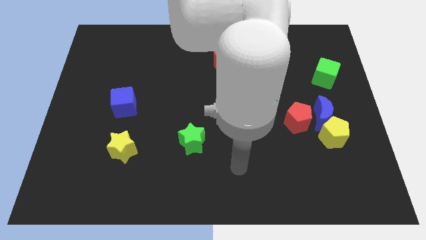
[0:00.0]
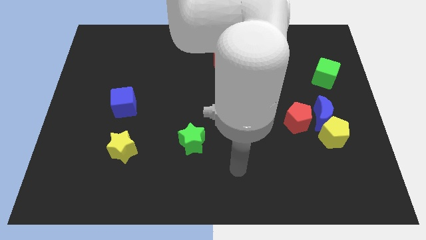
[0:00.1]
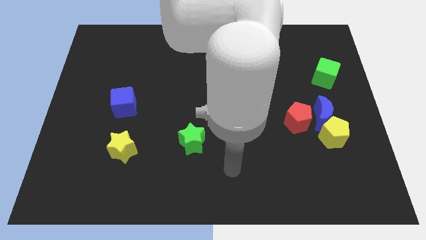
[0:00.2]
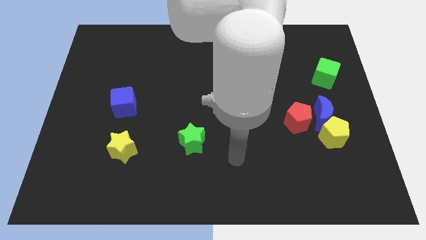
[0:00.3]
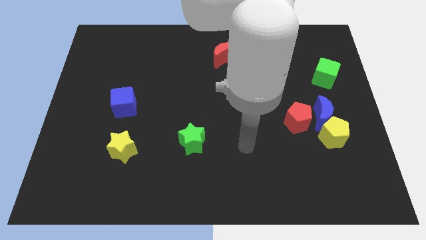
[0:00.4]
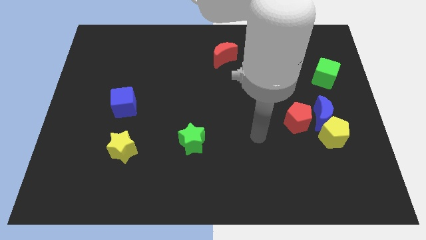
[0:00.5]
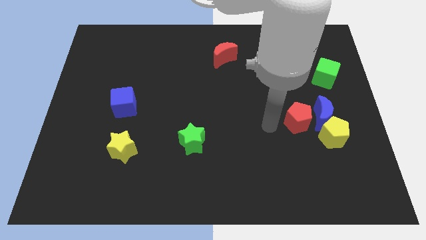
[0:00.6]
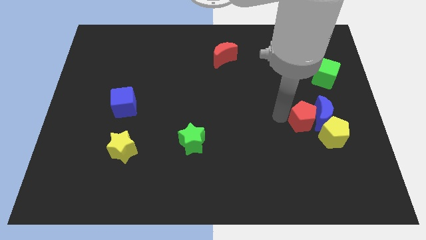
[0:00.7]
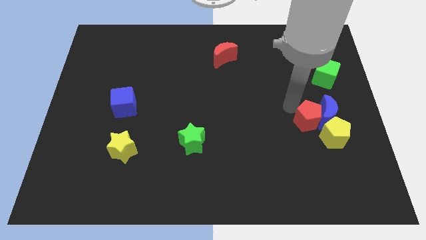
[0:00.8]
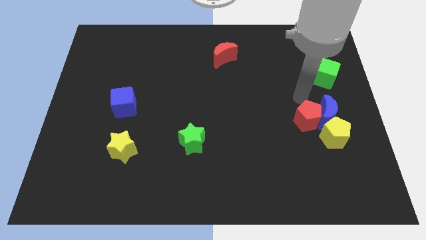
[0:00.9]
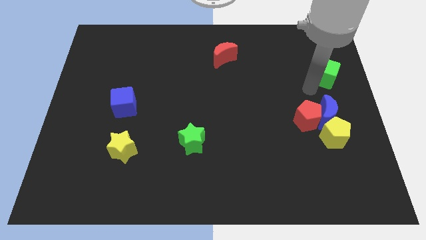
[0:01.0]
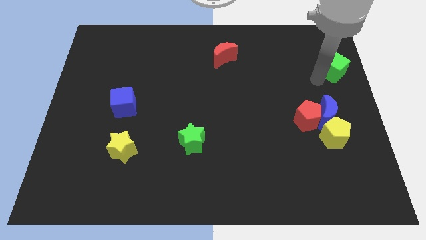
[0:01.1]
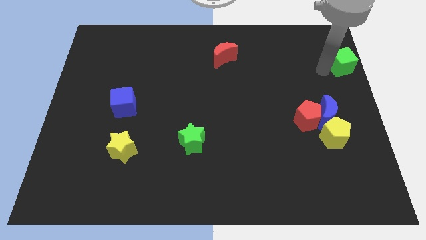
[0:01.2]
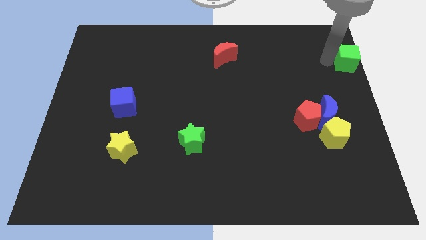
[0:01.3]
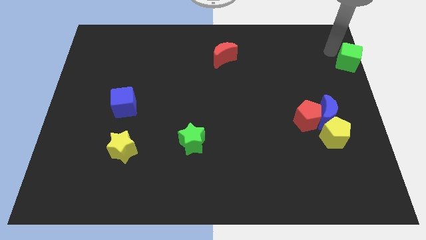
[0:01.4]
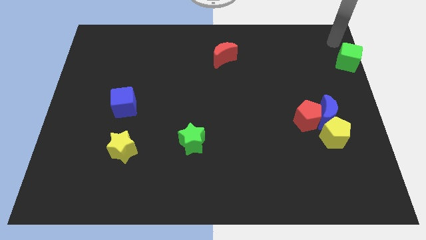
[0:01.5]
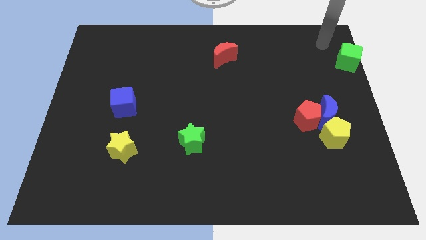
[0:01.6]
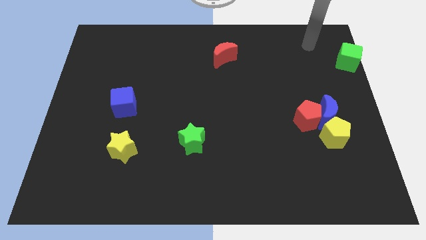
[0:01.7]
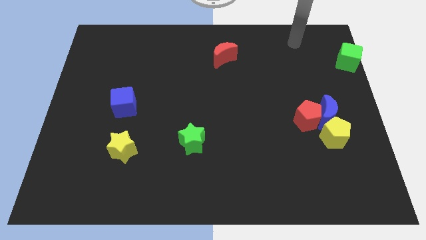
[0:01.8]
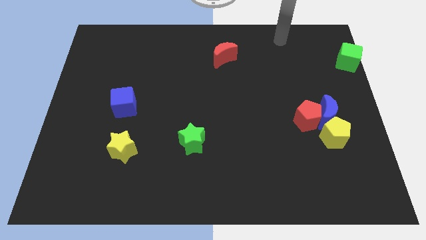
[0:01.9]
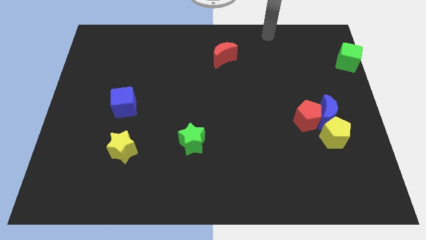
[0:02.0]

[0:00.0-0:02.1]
push the red pentagon into the blue crescent

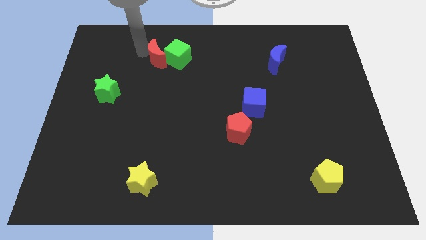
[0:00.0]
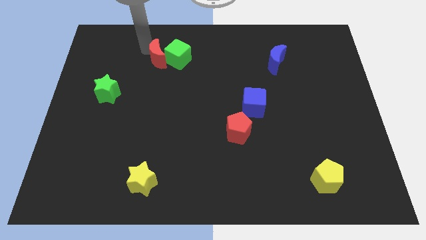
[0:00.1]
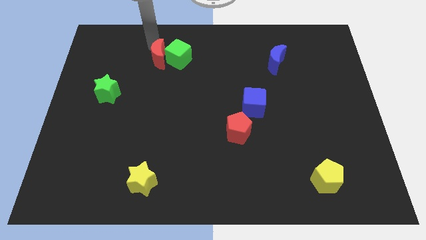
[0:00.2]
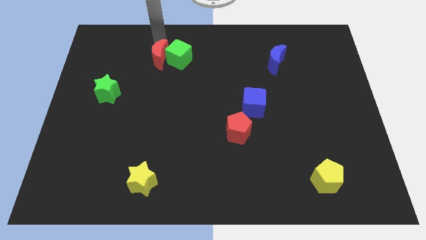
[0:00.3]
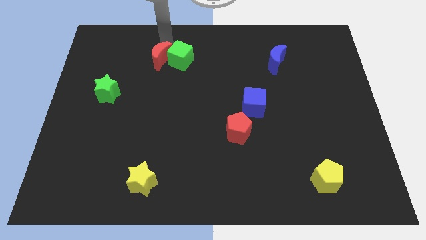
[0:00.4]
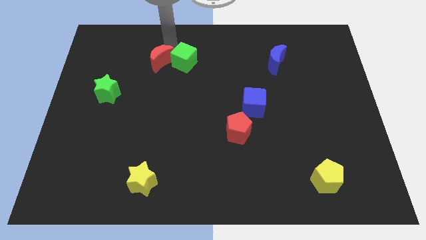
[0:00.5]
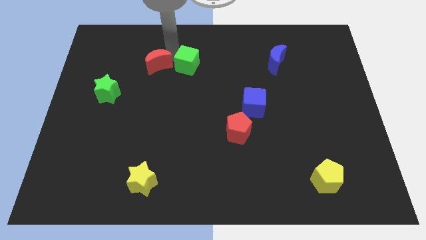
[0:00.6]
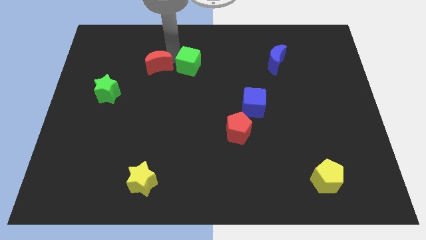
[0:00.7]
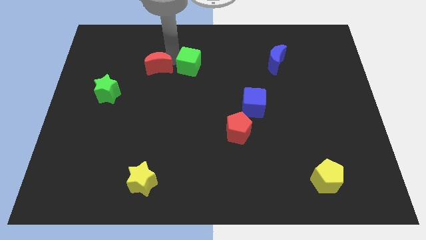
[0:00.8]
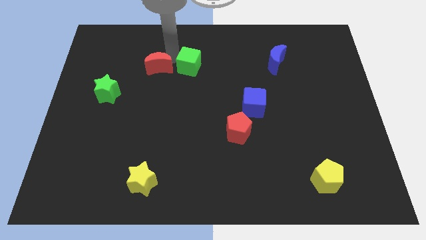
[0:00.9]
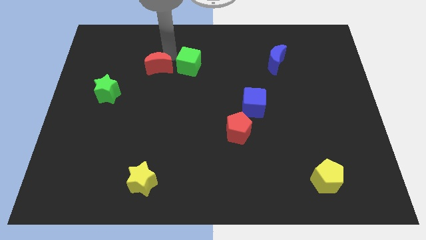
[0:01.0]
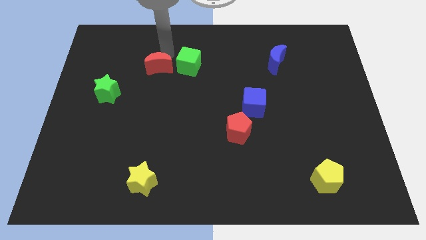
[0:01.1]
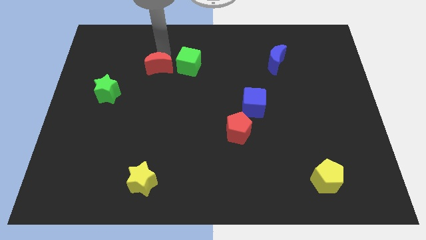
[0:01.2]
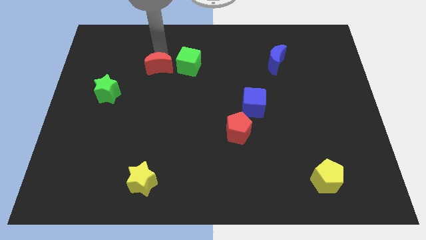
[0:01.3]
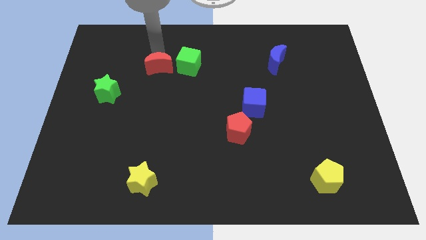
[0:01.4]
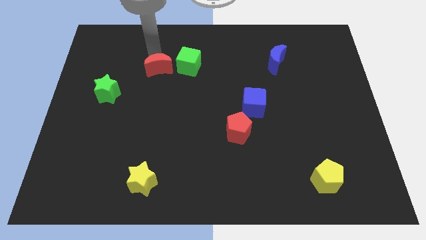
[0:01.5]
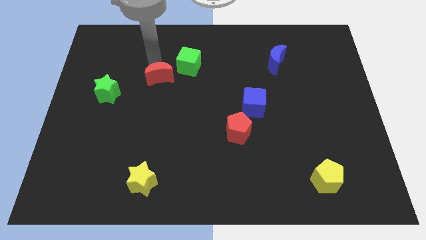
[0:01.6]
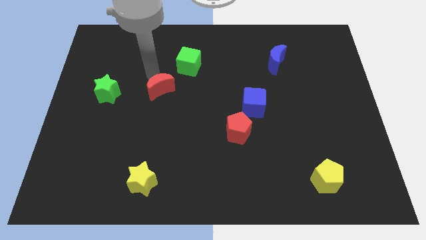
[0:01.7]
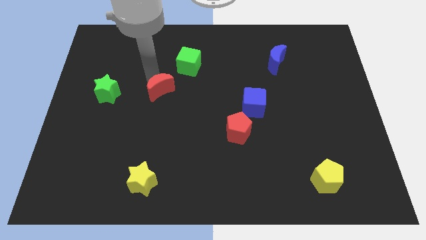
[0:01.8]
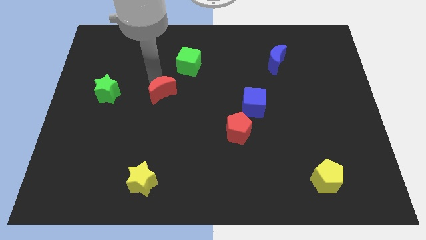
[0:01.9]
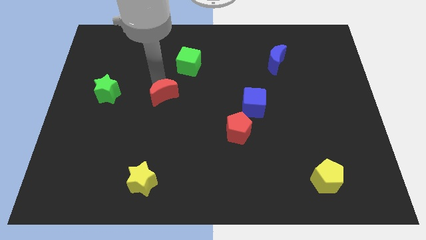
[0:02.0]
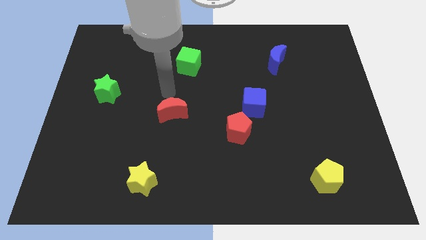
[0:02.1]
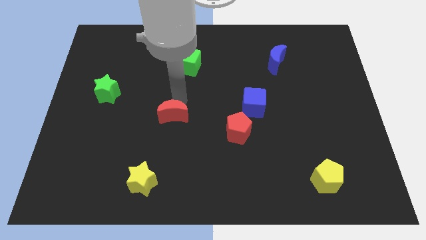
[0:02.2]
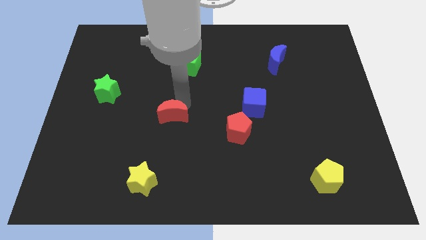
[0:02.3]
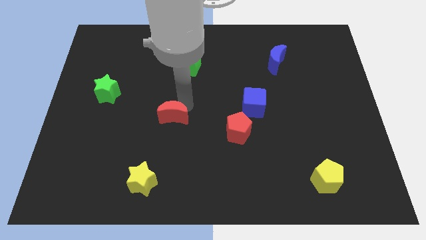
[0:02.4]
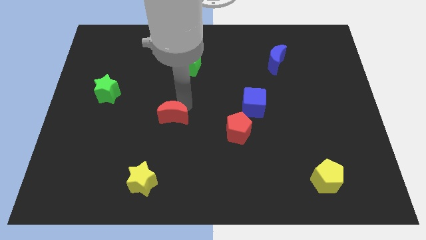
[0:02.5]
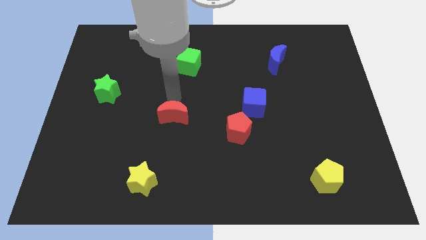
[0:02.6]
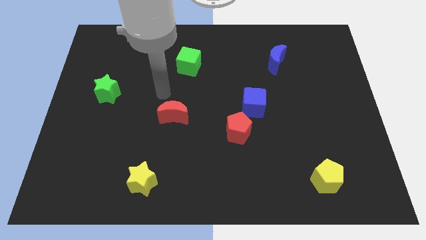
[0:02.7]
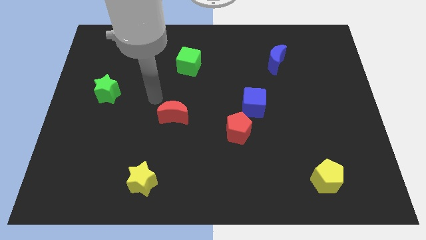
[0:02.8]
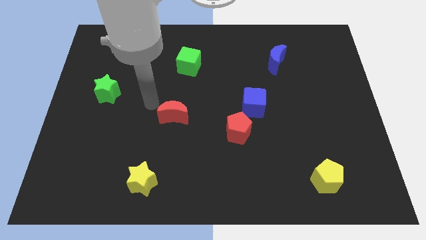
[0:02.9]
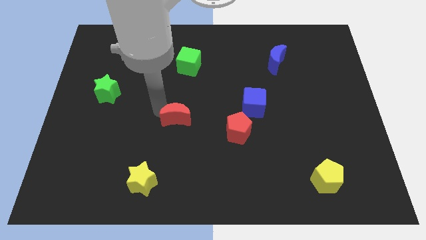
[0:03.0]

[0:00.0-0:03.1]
place the red moon to the left of the red pentagon

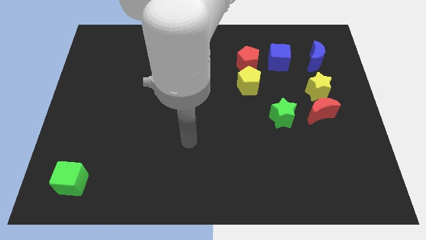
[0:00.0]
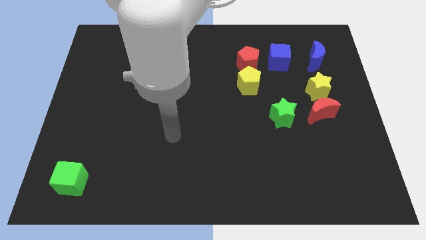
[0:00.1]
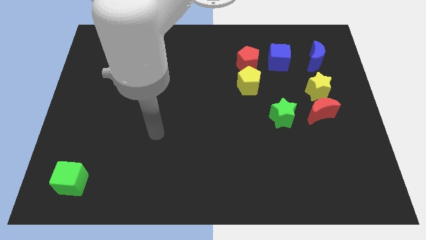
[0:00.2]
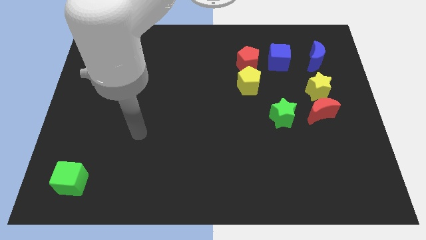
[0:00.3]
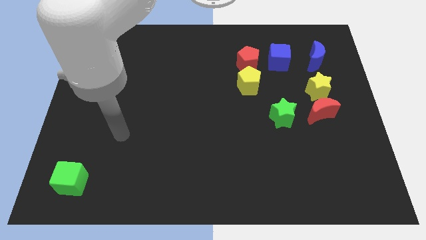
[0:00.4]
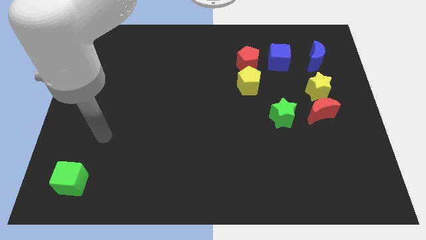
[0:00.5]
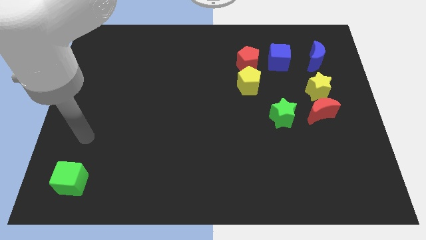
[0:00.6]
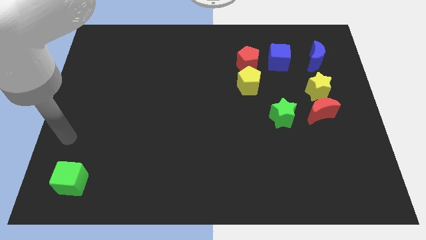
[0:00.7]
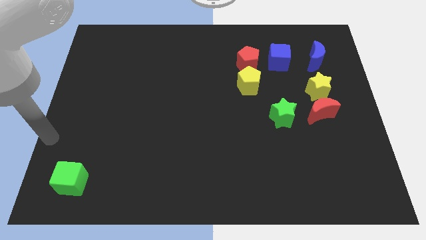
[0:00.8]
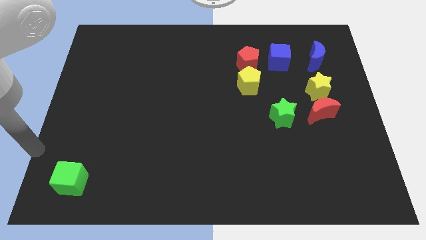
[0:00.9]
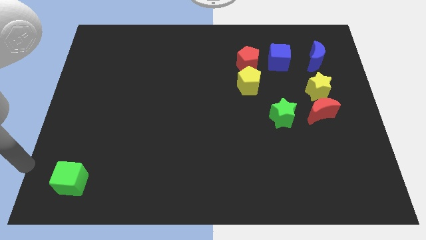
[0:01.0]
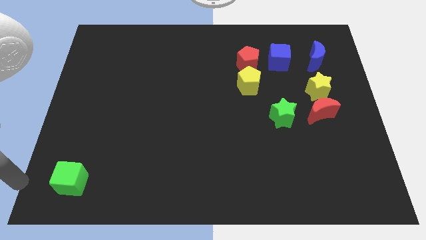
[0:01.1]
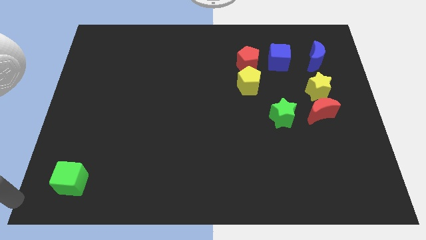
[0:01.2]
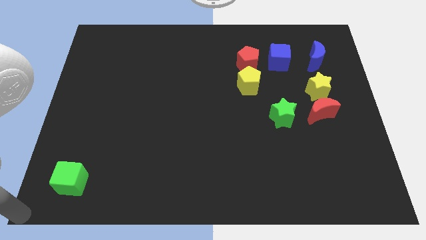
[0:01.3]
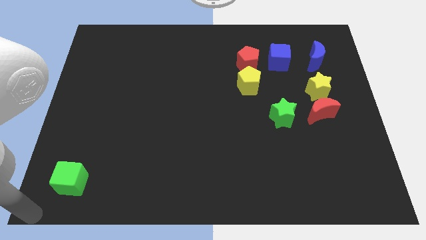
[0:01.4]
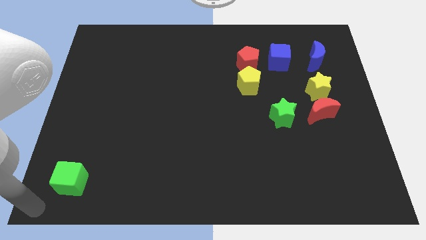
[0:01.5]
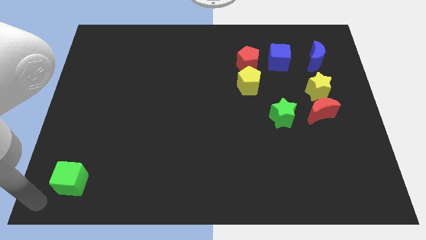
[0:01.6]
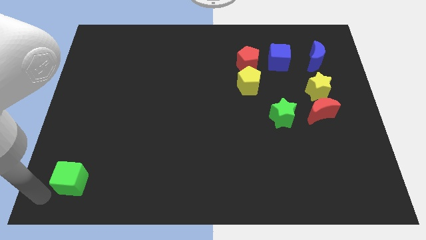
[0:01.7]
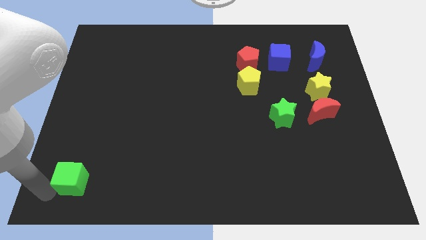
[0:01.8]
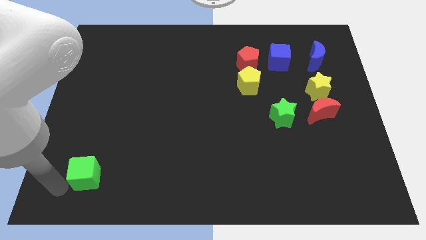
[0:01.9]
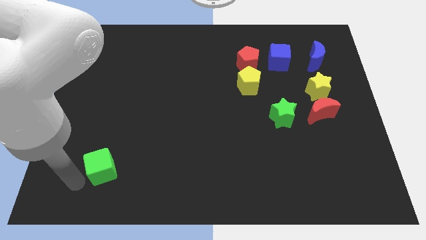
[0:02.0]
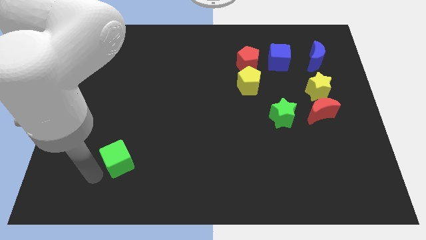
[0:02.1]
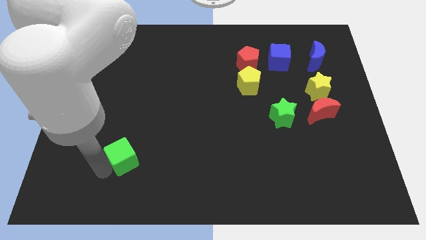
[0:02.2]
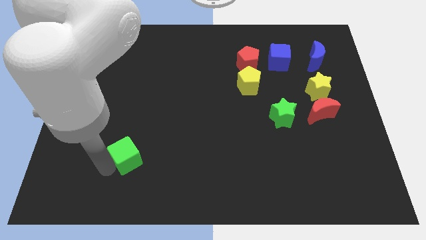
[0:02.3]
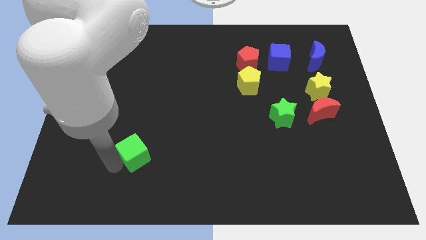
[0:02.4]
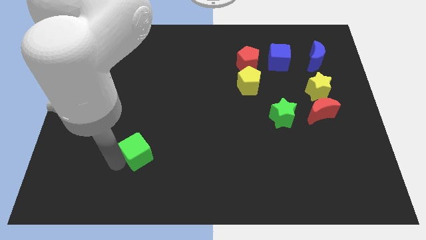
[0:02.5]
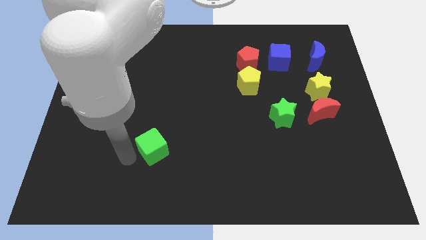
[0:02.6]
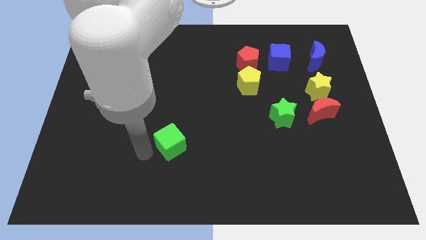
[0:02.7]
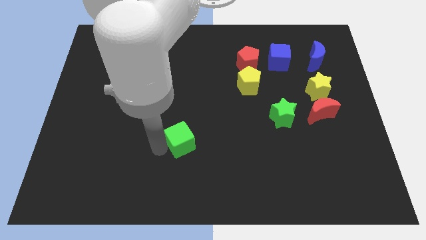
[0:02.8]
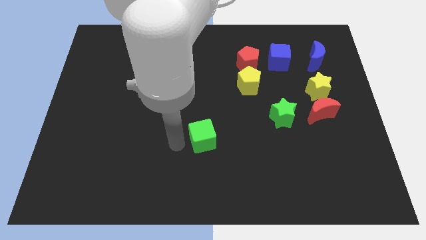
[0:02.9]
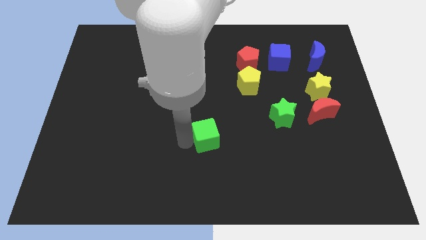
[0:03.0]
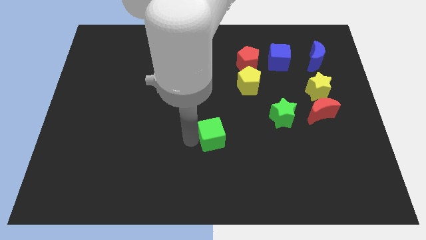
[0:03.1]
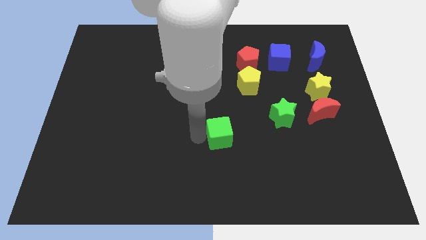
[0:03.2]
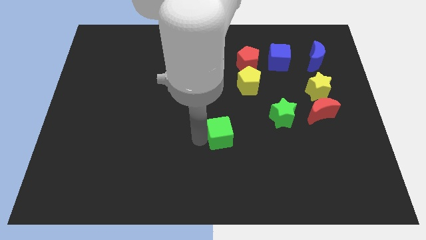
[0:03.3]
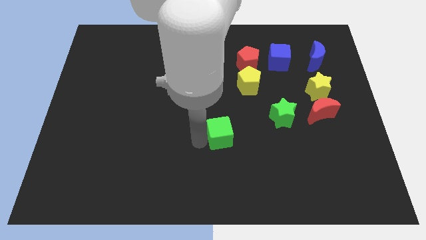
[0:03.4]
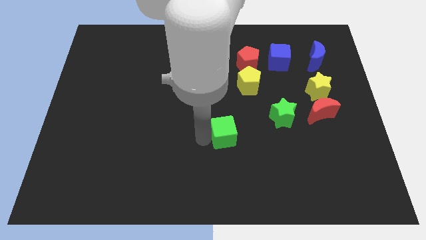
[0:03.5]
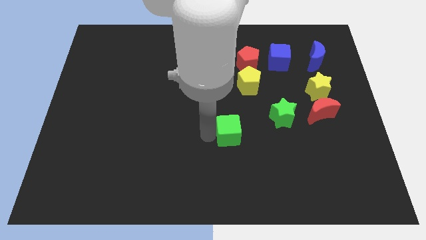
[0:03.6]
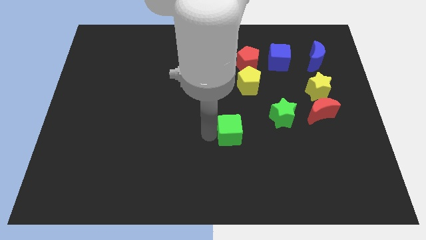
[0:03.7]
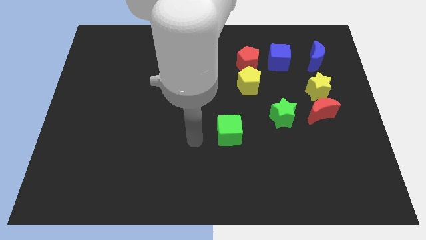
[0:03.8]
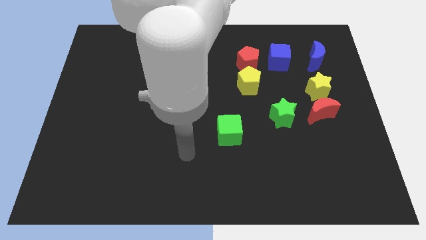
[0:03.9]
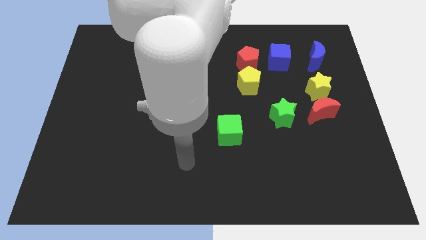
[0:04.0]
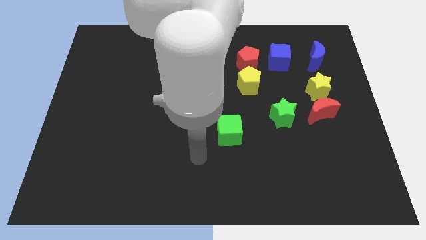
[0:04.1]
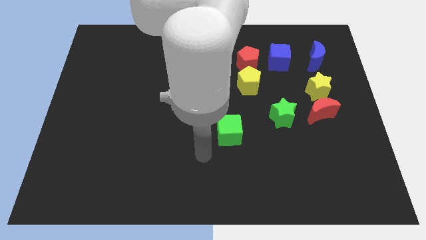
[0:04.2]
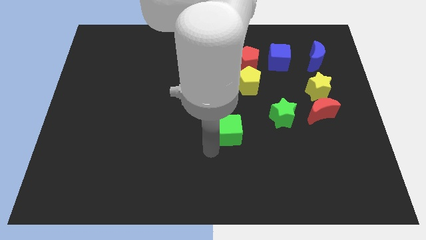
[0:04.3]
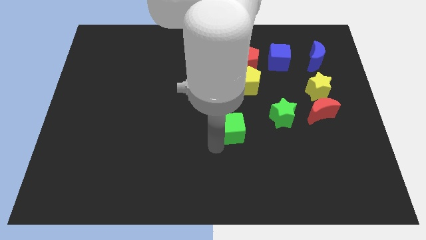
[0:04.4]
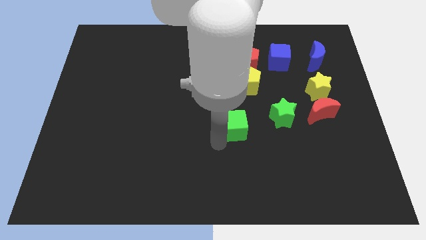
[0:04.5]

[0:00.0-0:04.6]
move the green cube into the green star
